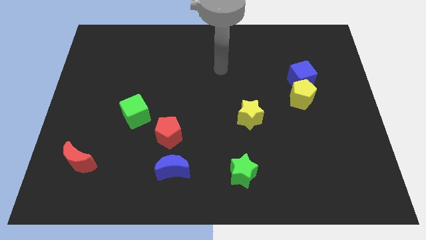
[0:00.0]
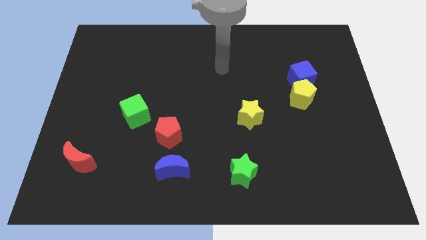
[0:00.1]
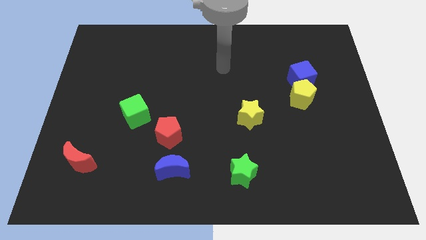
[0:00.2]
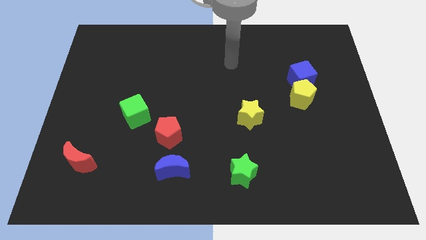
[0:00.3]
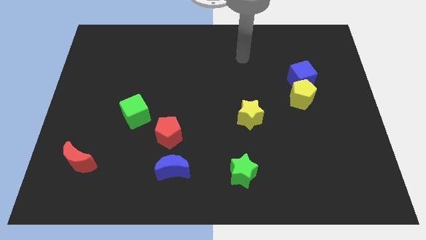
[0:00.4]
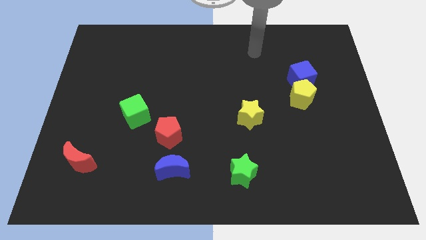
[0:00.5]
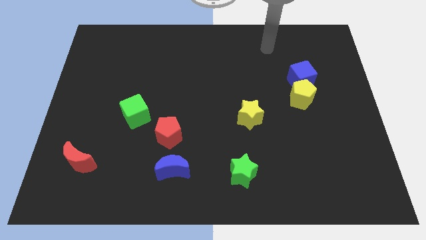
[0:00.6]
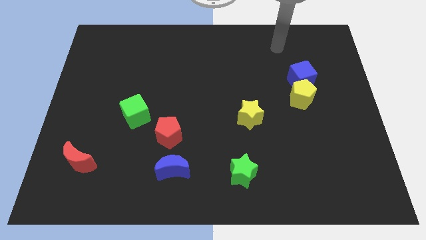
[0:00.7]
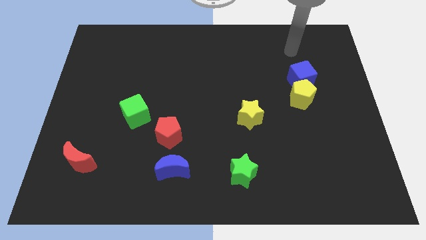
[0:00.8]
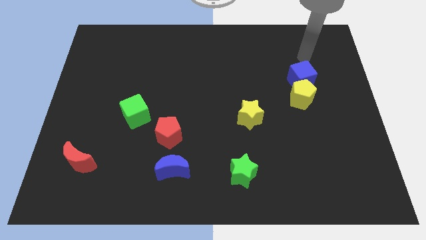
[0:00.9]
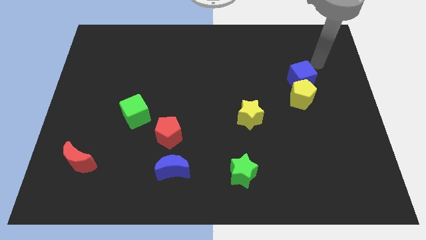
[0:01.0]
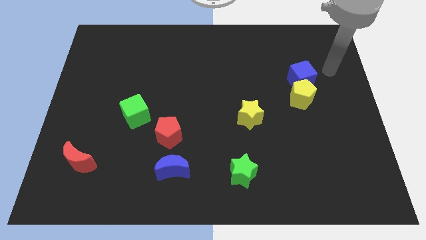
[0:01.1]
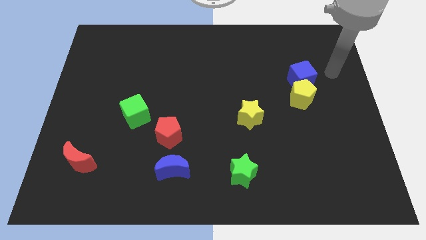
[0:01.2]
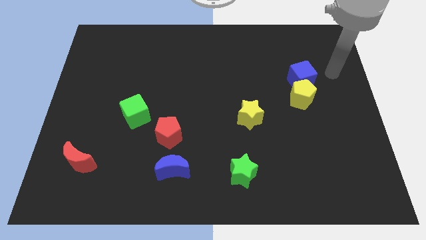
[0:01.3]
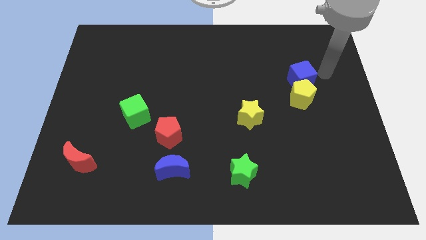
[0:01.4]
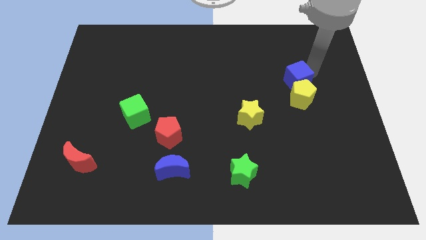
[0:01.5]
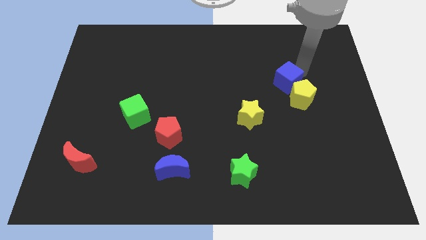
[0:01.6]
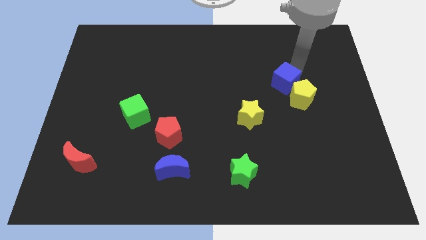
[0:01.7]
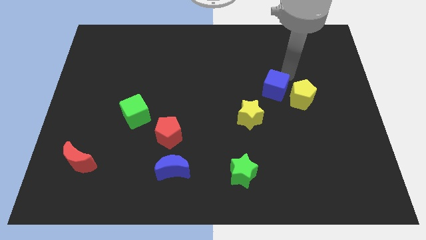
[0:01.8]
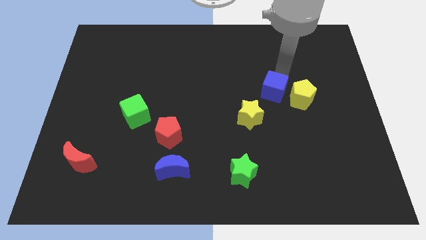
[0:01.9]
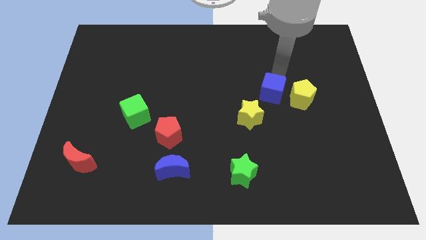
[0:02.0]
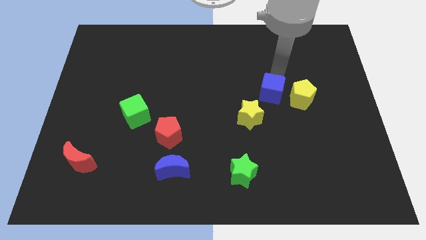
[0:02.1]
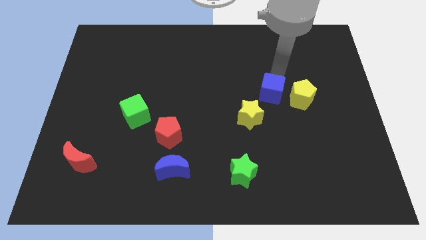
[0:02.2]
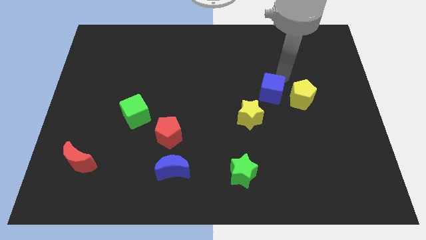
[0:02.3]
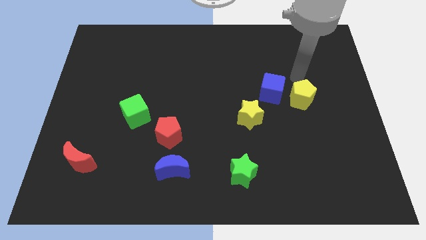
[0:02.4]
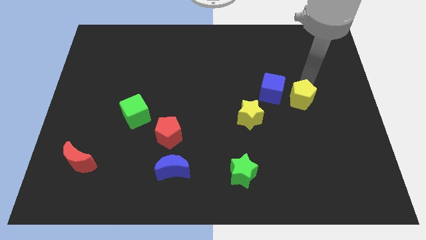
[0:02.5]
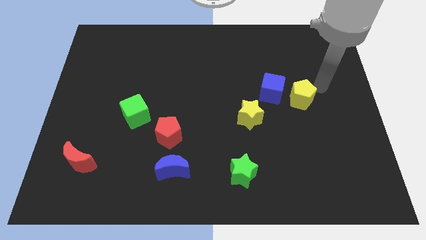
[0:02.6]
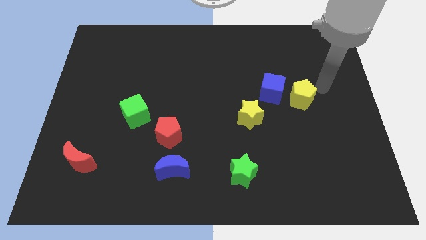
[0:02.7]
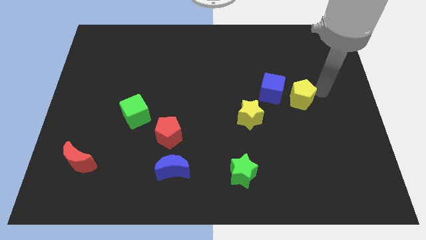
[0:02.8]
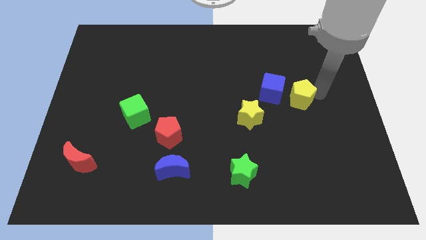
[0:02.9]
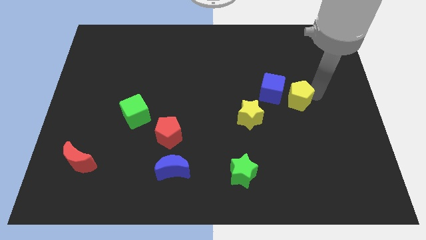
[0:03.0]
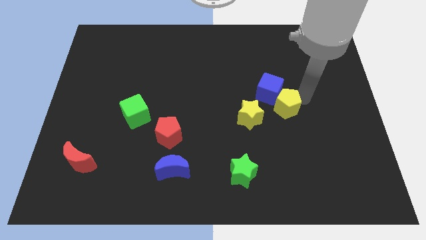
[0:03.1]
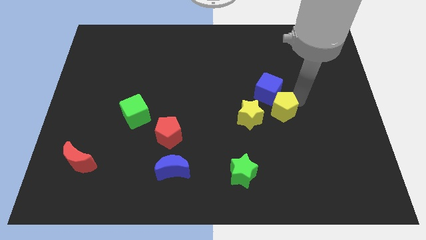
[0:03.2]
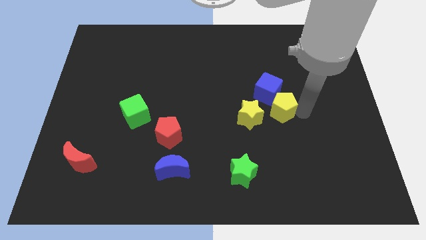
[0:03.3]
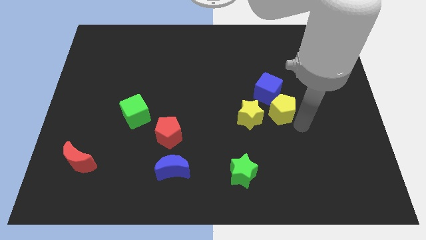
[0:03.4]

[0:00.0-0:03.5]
push yellow pentagon beside yellow star

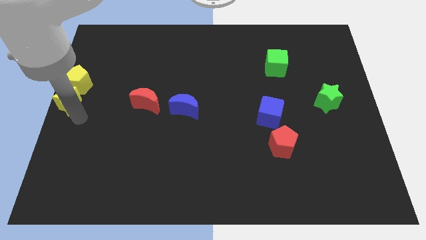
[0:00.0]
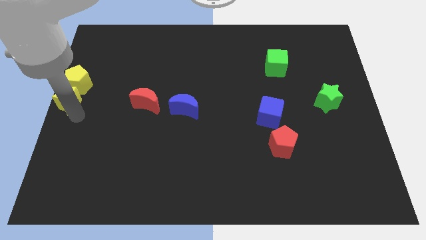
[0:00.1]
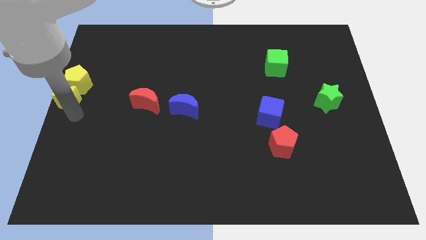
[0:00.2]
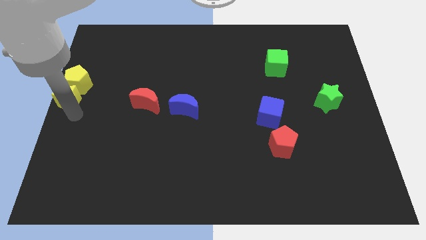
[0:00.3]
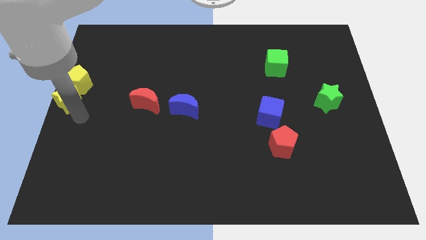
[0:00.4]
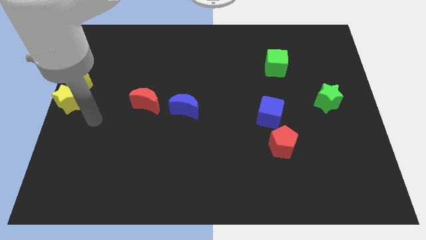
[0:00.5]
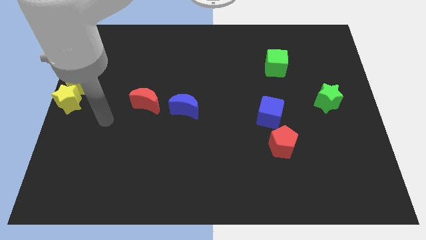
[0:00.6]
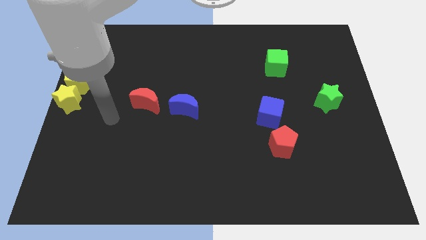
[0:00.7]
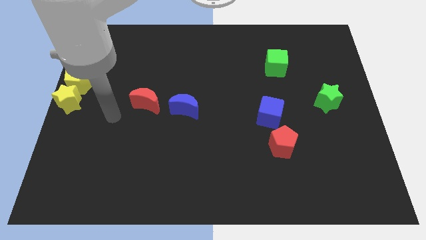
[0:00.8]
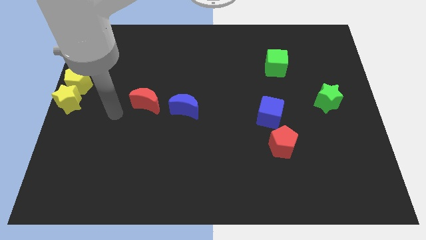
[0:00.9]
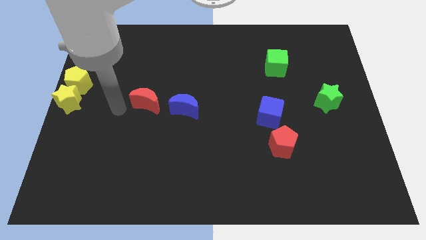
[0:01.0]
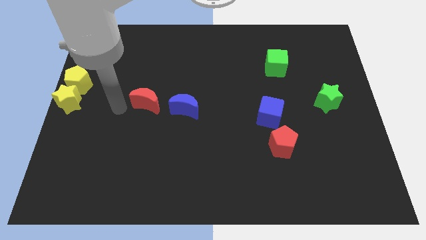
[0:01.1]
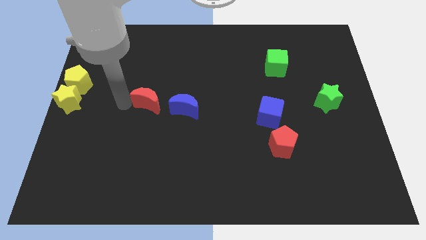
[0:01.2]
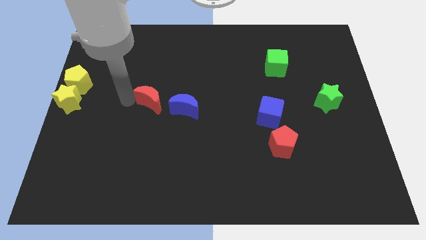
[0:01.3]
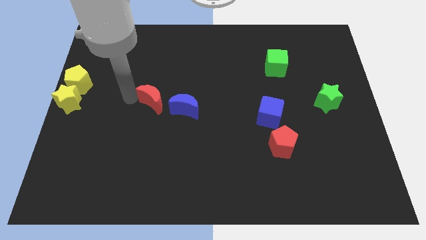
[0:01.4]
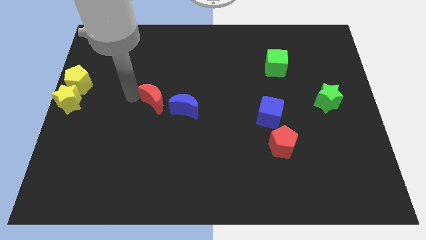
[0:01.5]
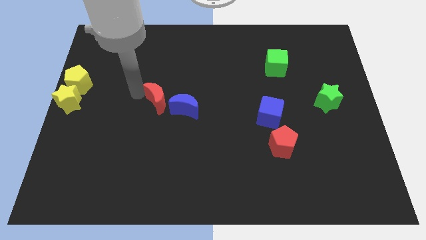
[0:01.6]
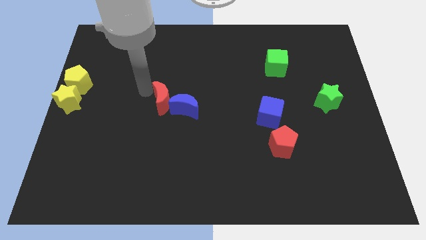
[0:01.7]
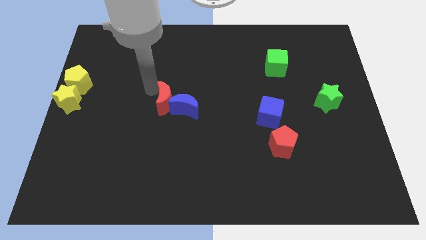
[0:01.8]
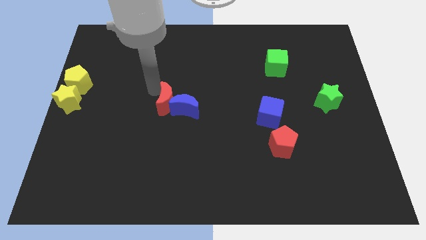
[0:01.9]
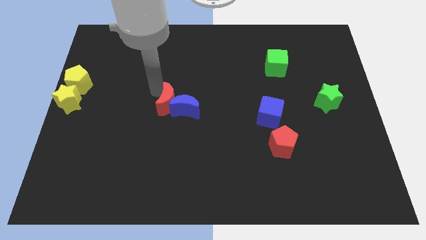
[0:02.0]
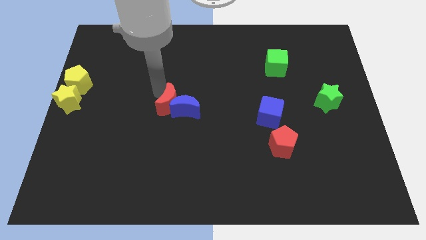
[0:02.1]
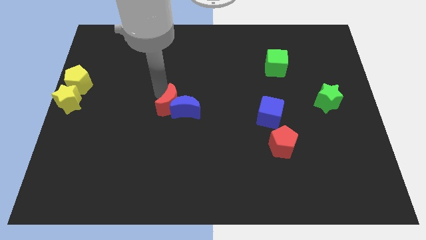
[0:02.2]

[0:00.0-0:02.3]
push the red moon into the blue moon

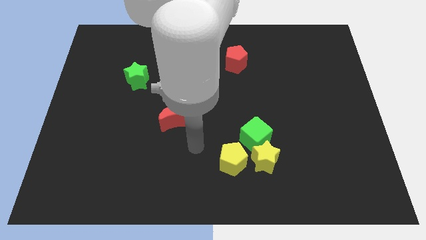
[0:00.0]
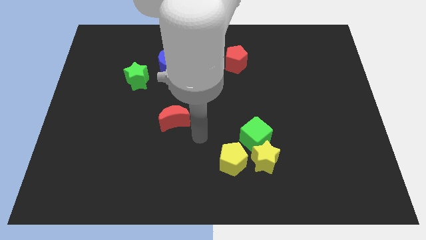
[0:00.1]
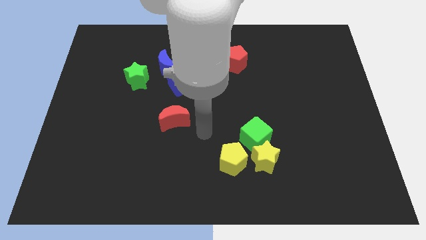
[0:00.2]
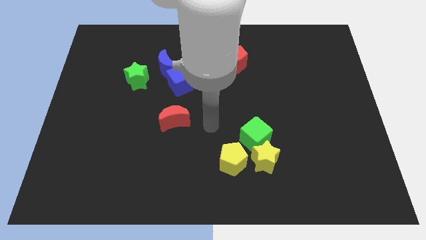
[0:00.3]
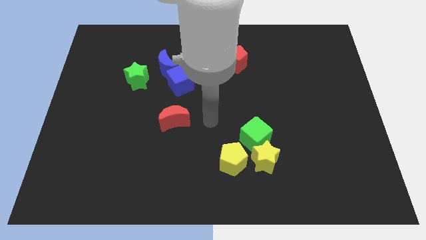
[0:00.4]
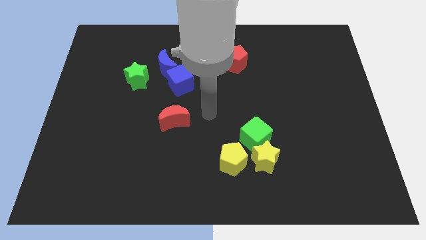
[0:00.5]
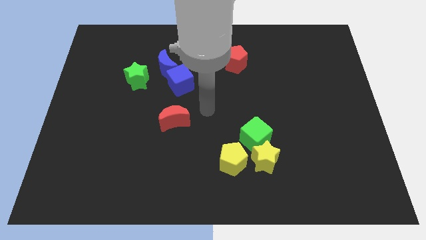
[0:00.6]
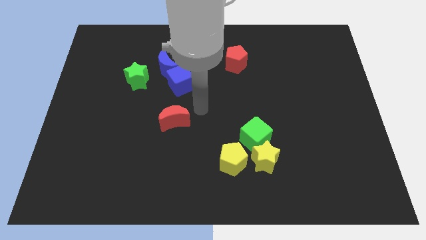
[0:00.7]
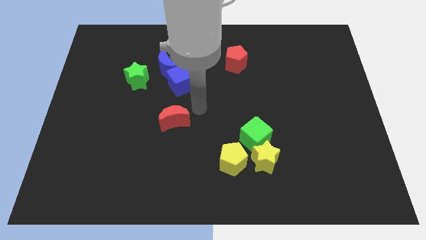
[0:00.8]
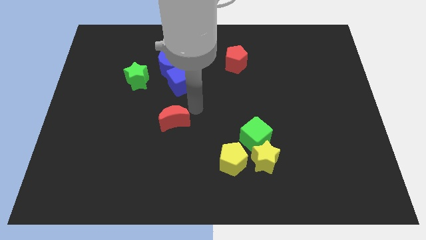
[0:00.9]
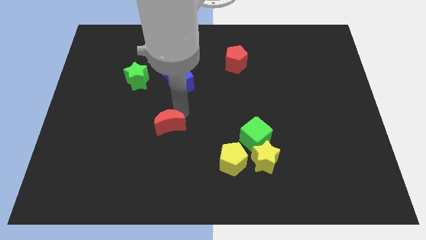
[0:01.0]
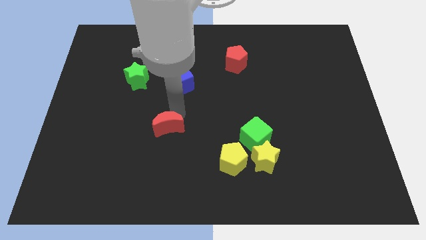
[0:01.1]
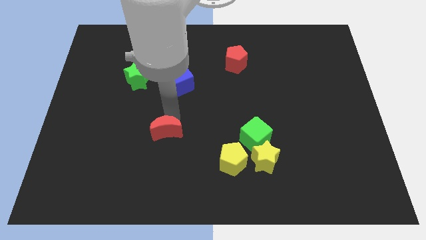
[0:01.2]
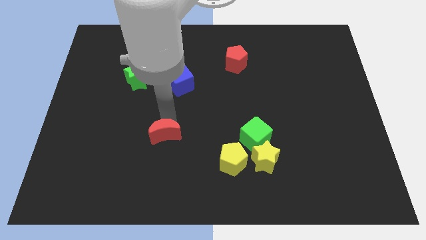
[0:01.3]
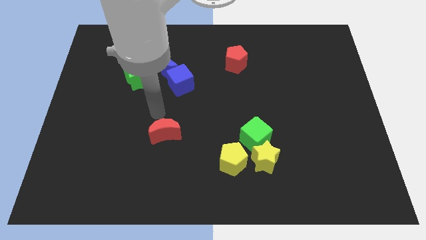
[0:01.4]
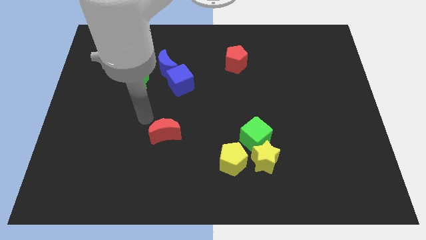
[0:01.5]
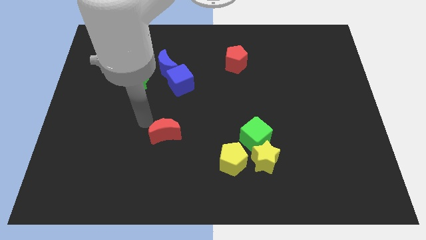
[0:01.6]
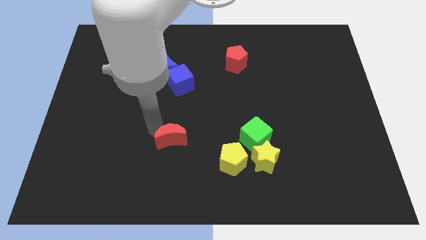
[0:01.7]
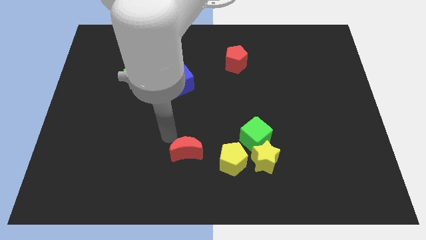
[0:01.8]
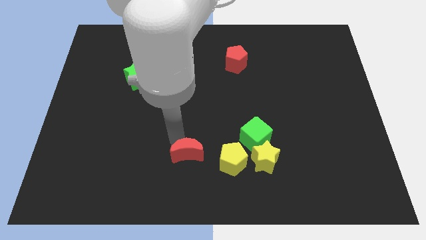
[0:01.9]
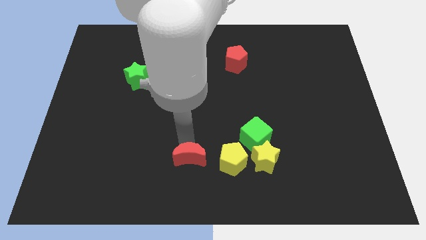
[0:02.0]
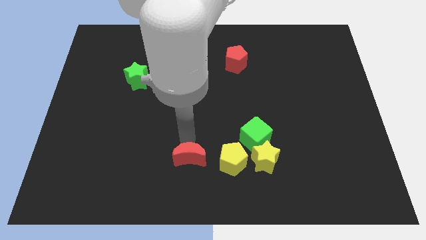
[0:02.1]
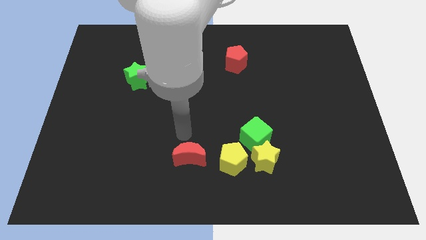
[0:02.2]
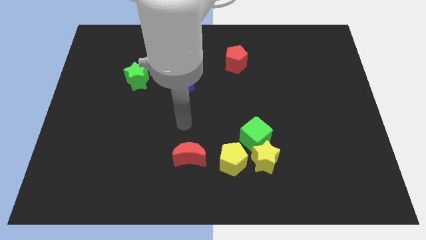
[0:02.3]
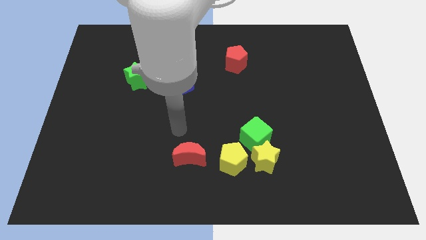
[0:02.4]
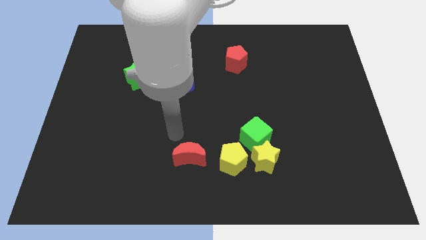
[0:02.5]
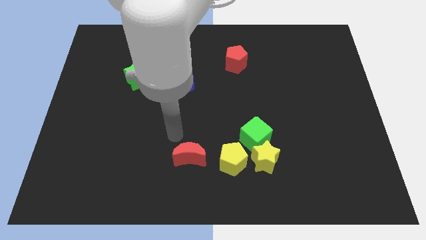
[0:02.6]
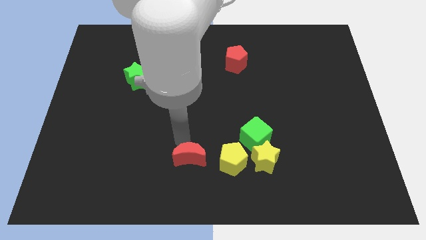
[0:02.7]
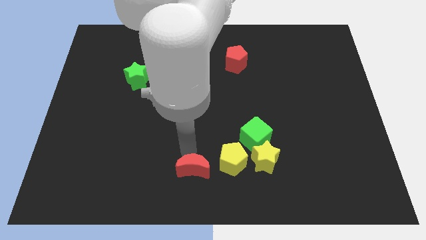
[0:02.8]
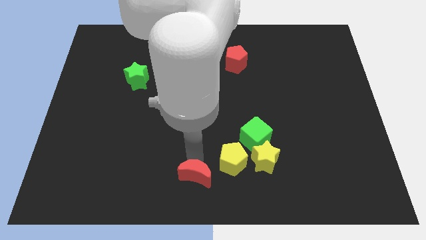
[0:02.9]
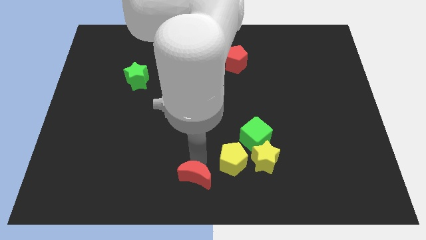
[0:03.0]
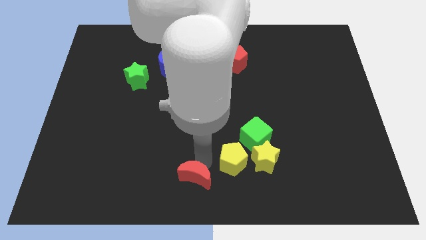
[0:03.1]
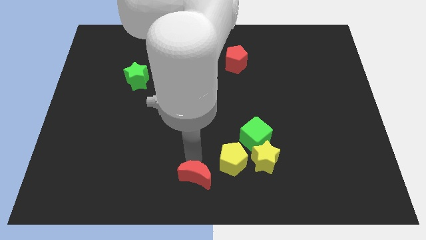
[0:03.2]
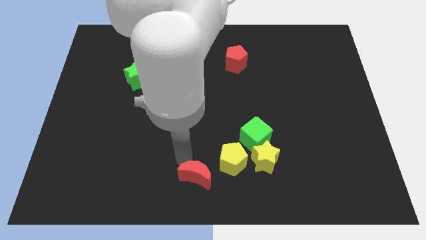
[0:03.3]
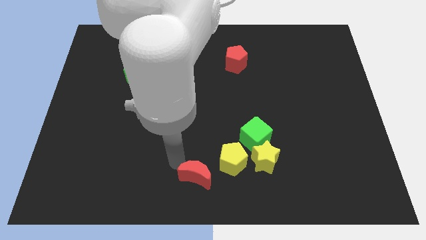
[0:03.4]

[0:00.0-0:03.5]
move the red crescent to the bottom center
